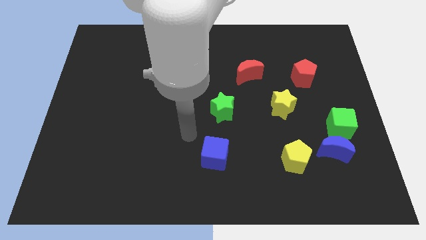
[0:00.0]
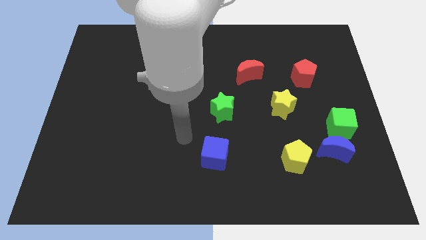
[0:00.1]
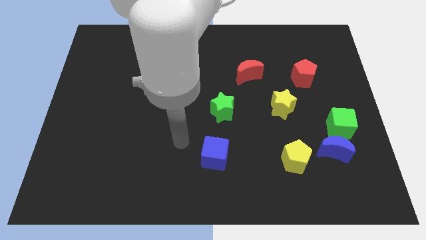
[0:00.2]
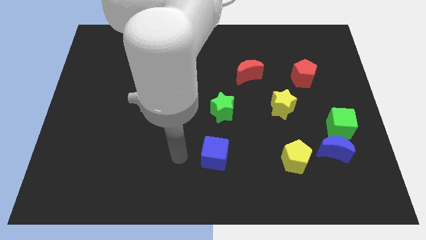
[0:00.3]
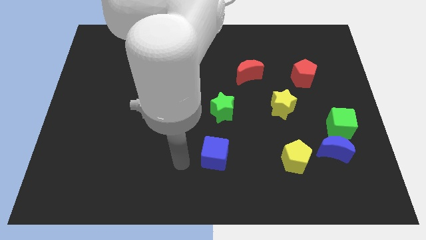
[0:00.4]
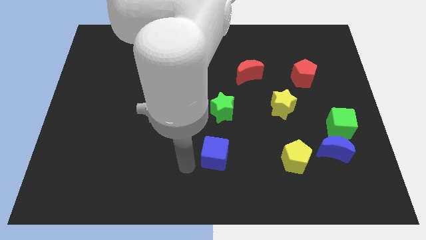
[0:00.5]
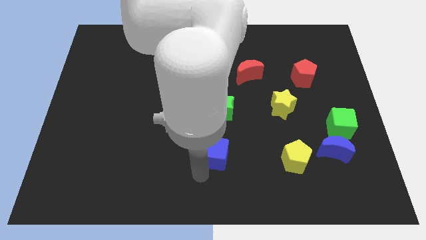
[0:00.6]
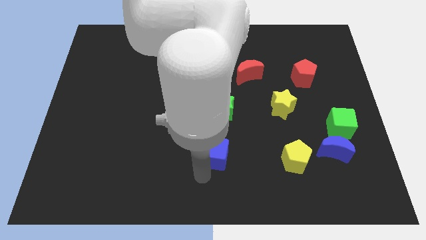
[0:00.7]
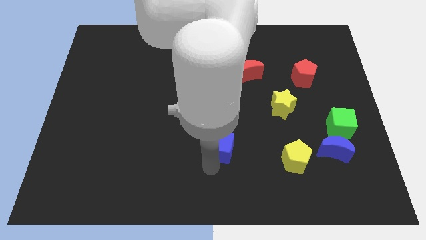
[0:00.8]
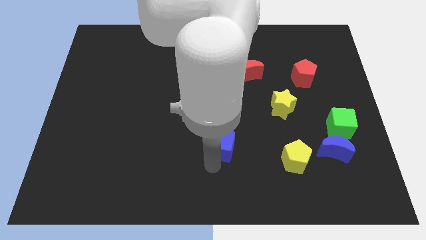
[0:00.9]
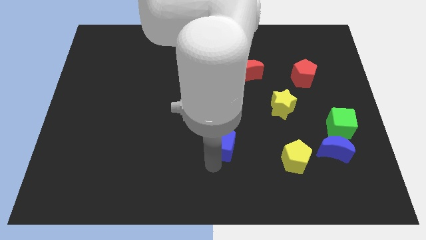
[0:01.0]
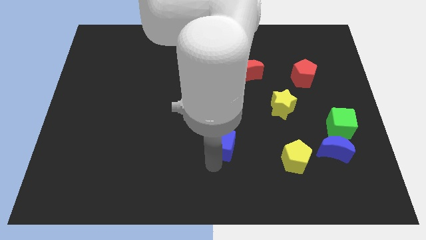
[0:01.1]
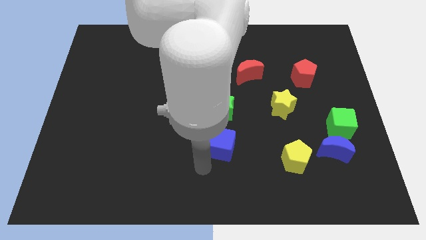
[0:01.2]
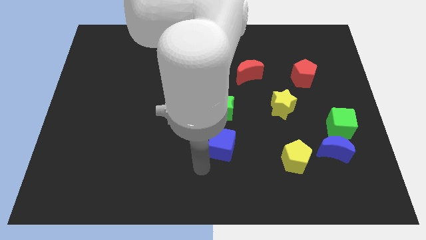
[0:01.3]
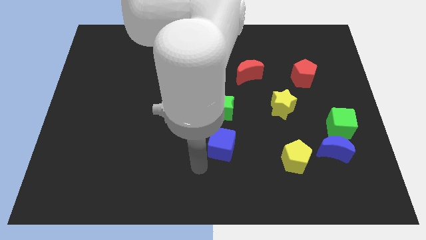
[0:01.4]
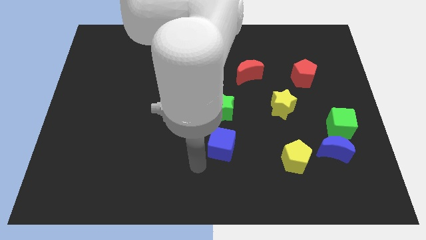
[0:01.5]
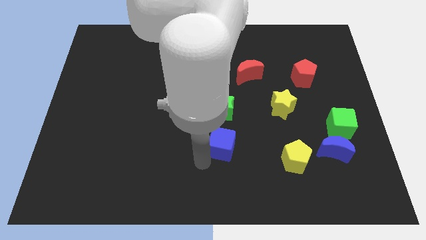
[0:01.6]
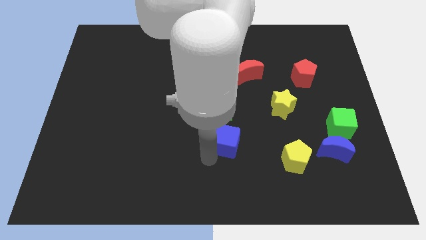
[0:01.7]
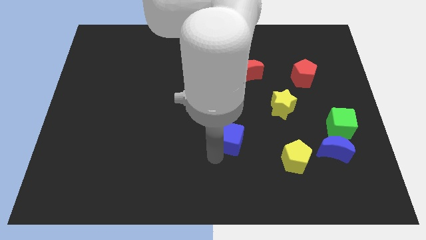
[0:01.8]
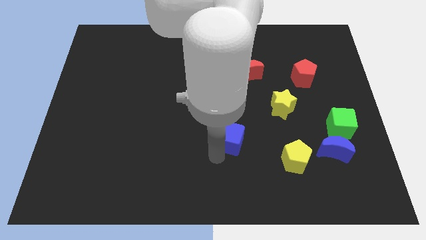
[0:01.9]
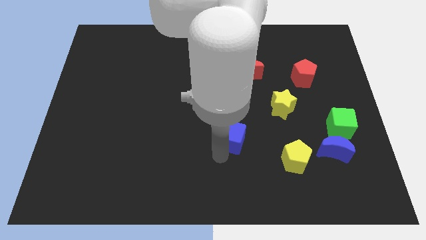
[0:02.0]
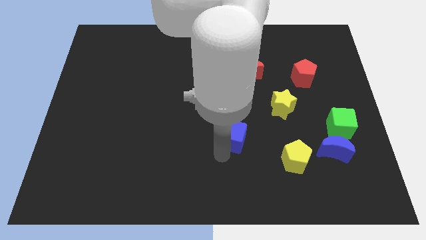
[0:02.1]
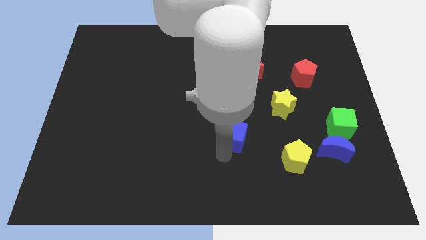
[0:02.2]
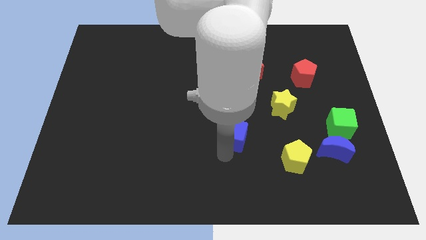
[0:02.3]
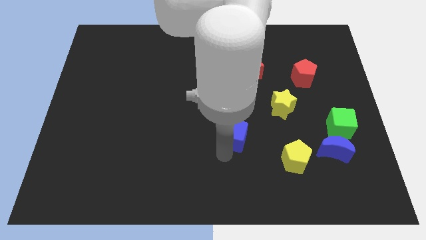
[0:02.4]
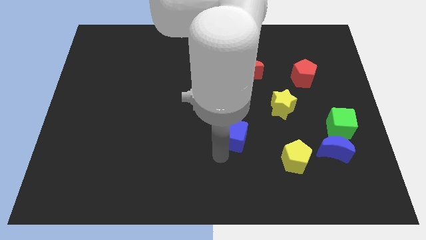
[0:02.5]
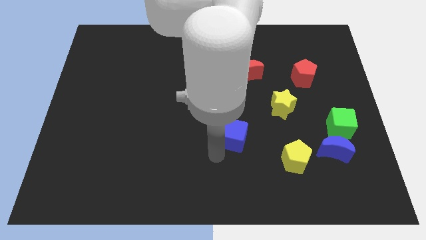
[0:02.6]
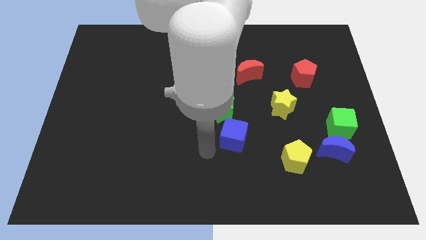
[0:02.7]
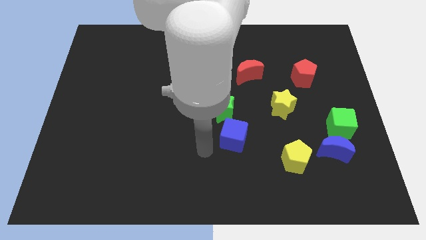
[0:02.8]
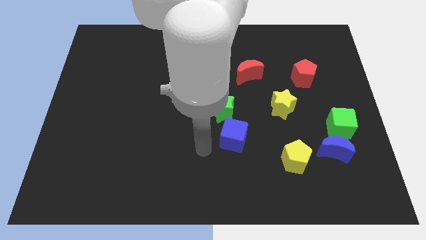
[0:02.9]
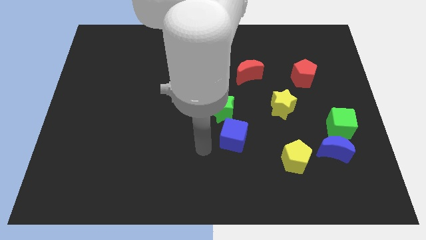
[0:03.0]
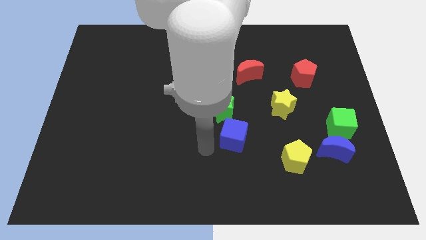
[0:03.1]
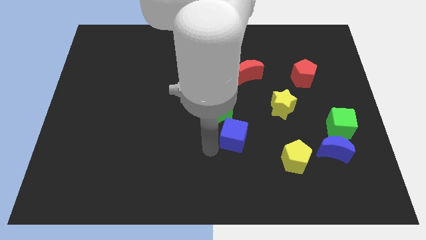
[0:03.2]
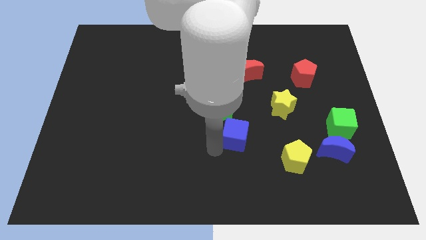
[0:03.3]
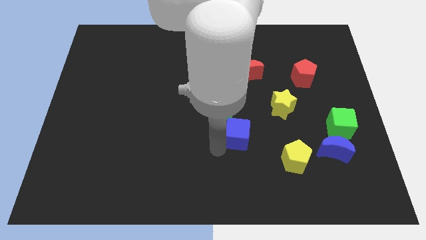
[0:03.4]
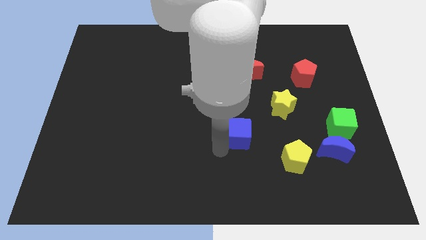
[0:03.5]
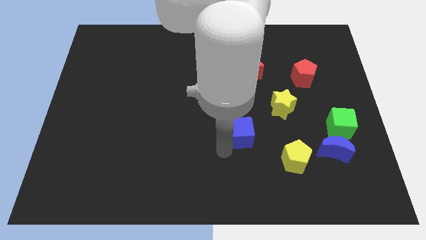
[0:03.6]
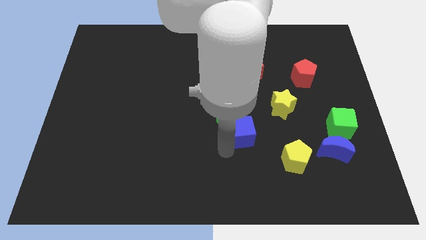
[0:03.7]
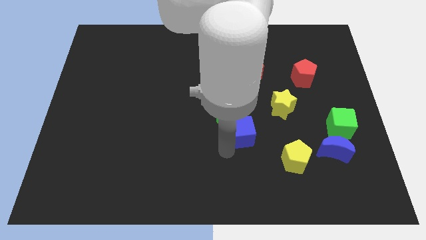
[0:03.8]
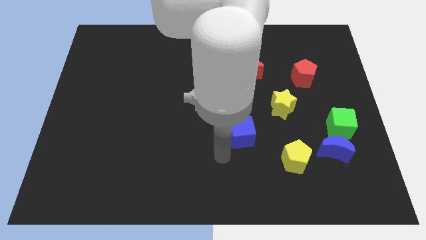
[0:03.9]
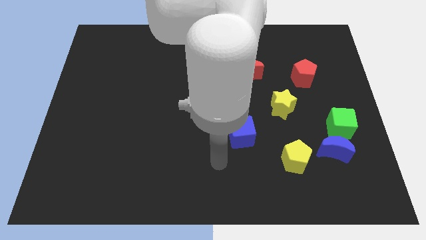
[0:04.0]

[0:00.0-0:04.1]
move the blue cube to the bottom right side of the green star

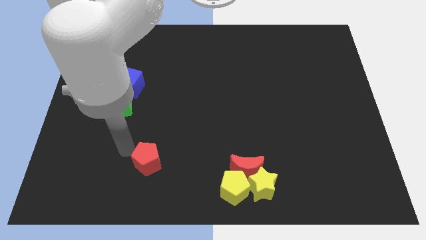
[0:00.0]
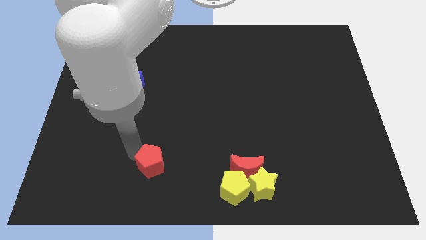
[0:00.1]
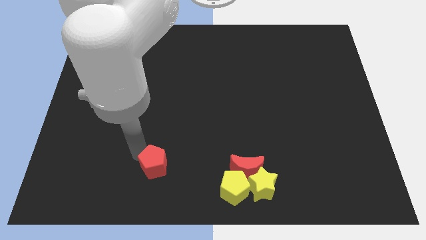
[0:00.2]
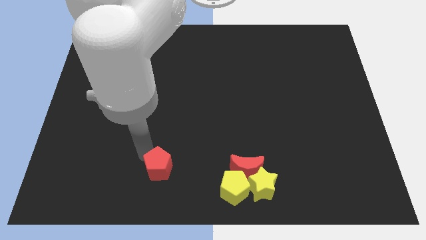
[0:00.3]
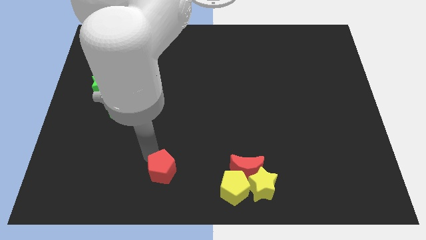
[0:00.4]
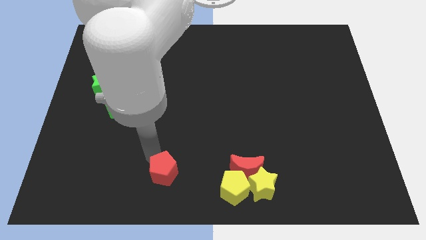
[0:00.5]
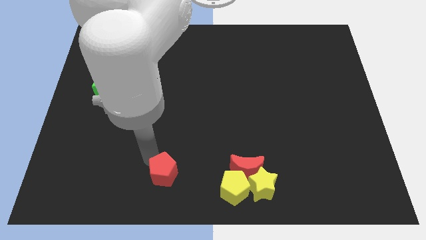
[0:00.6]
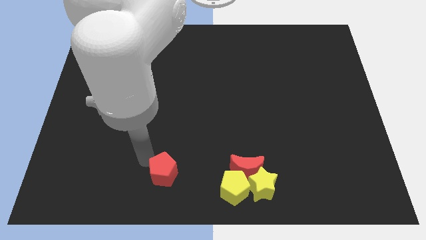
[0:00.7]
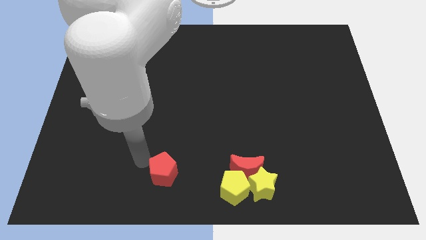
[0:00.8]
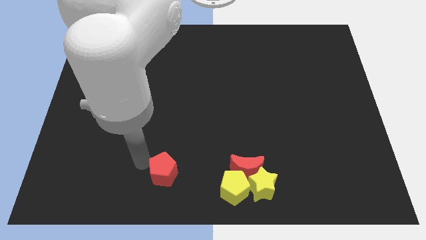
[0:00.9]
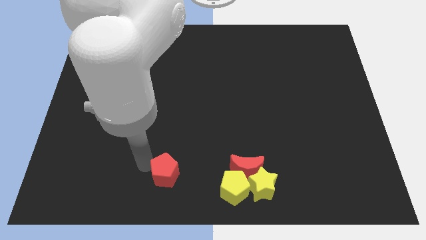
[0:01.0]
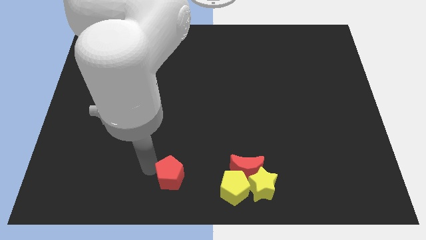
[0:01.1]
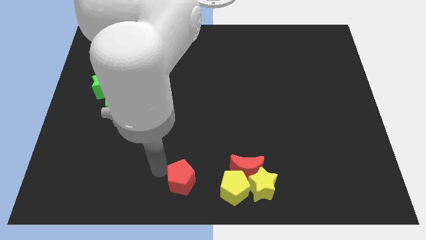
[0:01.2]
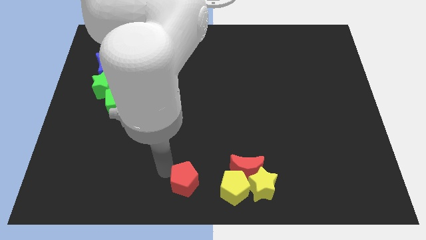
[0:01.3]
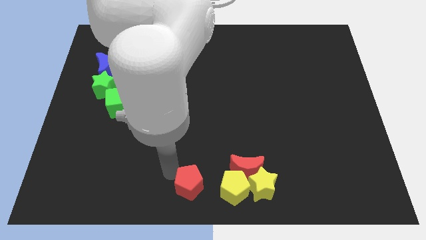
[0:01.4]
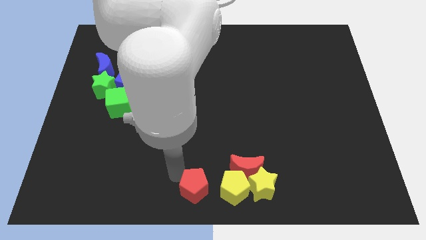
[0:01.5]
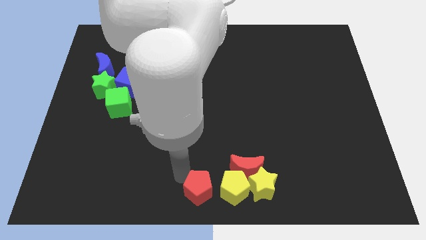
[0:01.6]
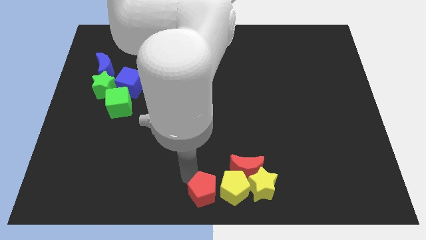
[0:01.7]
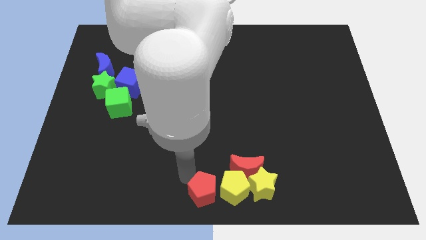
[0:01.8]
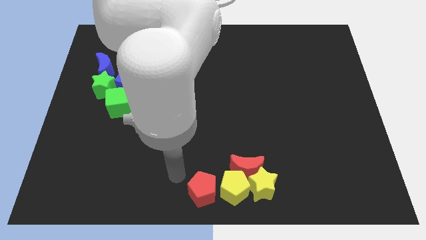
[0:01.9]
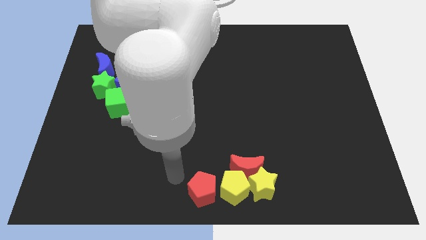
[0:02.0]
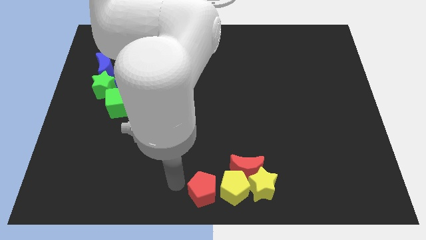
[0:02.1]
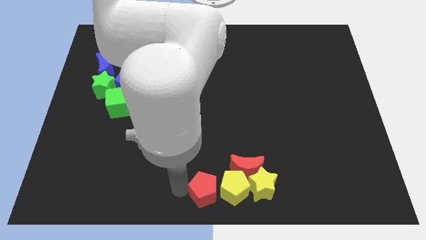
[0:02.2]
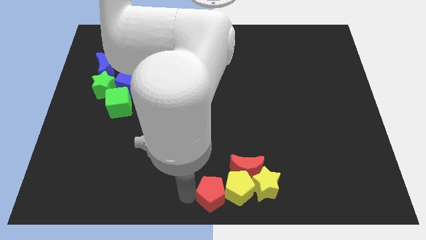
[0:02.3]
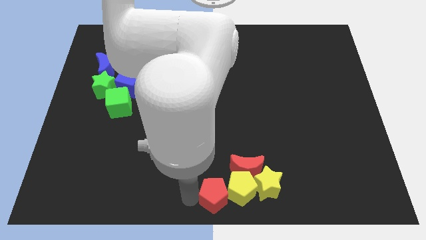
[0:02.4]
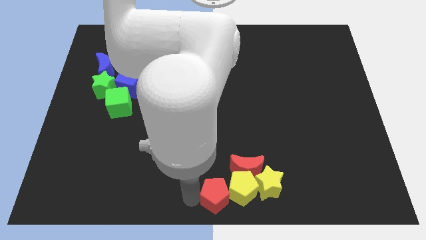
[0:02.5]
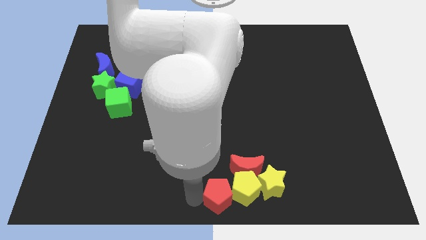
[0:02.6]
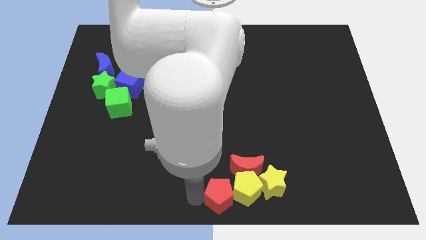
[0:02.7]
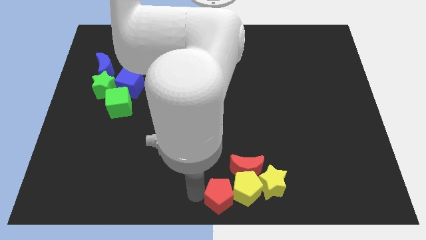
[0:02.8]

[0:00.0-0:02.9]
push the red pentagon into the yellow pentagon

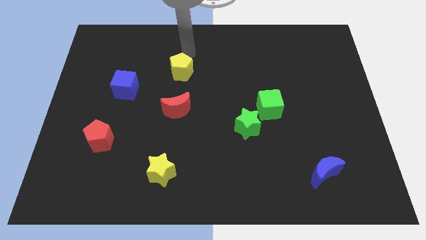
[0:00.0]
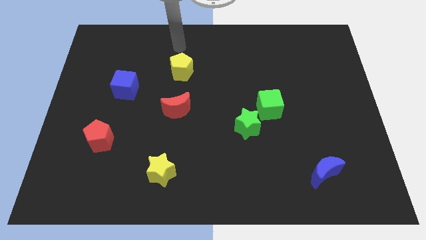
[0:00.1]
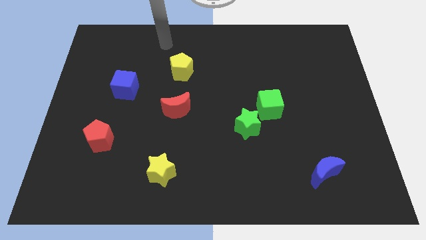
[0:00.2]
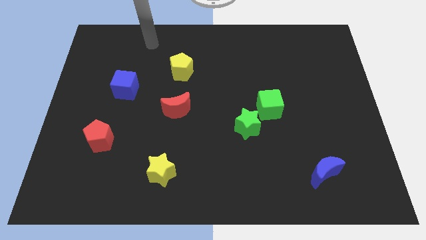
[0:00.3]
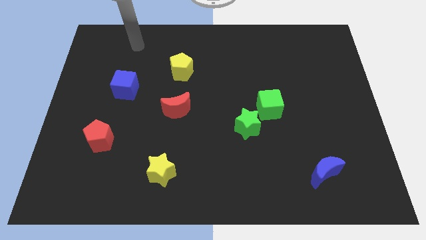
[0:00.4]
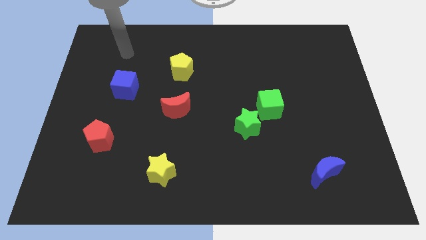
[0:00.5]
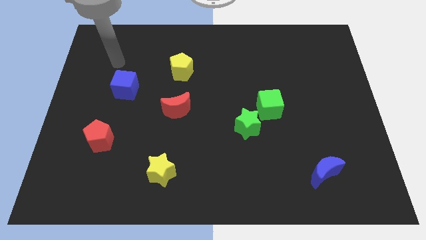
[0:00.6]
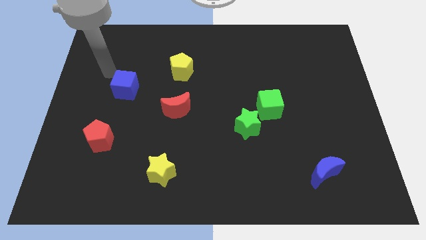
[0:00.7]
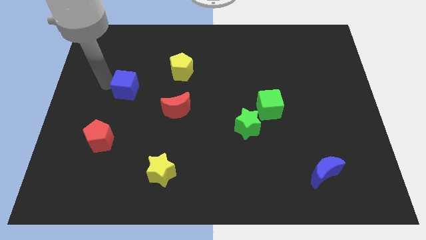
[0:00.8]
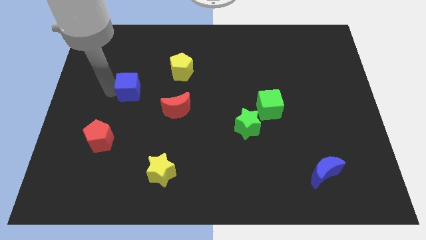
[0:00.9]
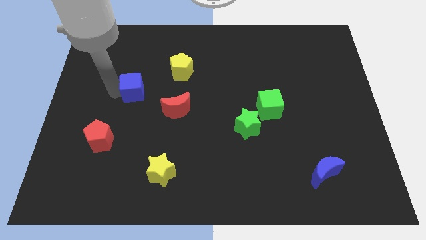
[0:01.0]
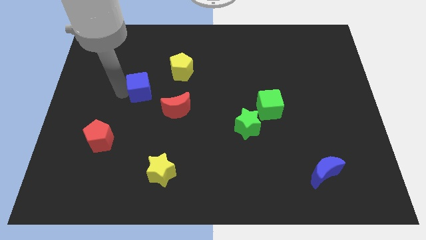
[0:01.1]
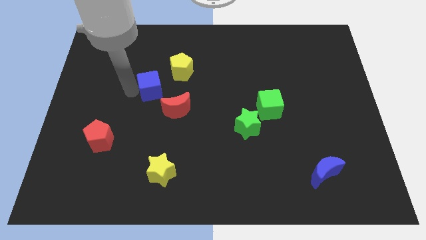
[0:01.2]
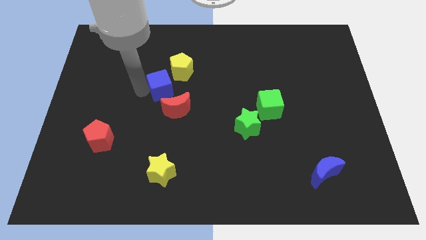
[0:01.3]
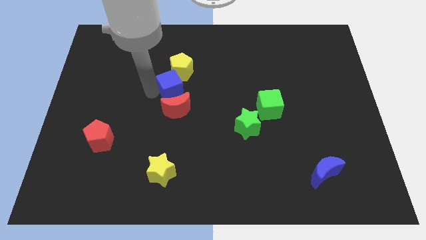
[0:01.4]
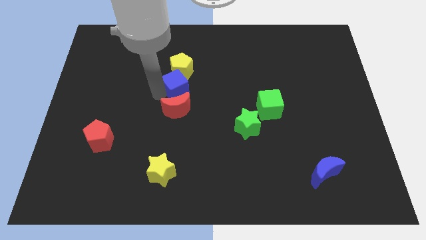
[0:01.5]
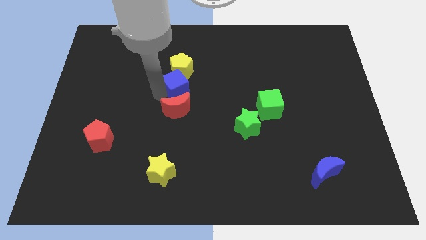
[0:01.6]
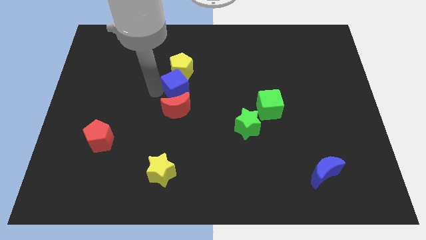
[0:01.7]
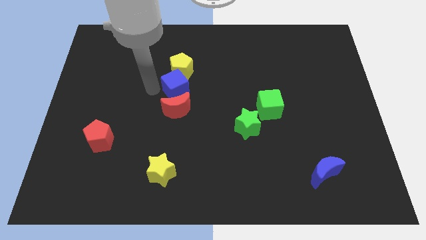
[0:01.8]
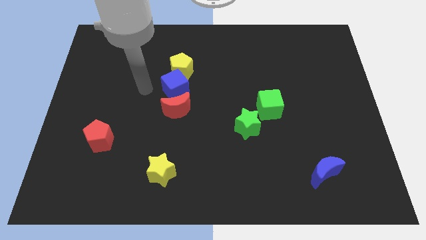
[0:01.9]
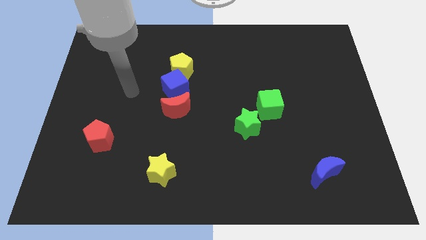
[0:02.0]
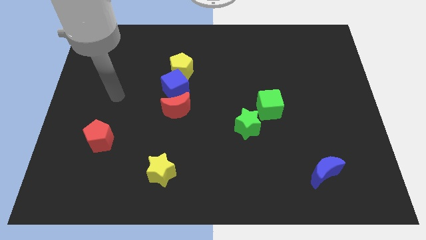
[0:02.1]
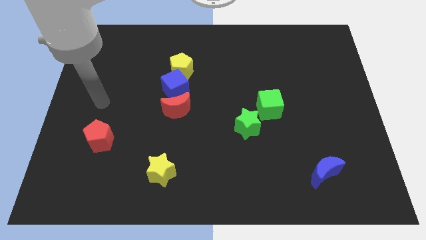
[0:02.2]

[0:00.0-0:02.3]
put the blue cube between yellow pentagon and red moon
